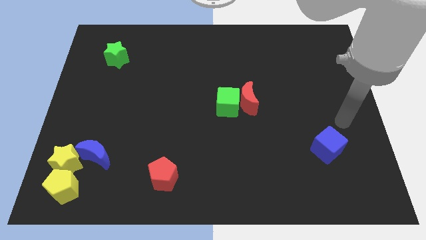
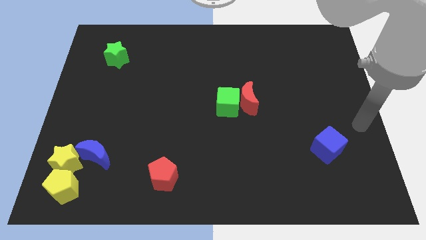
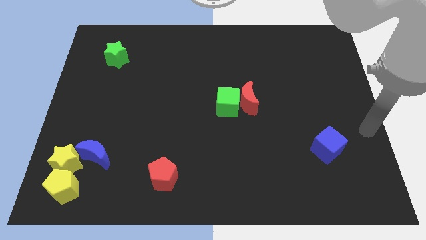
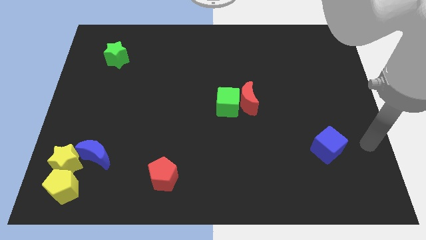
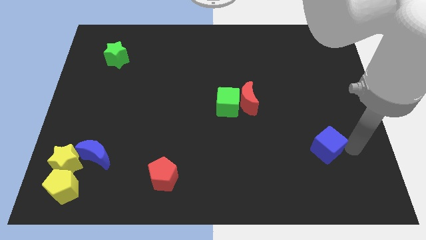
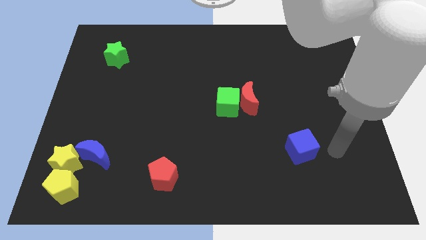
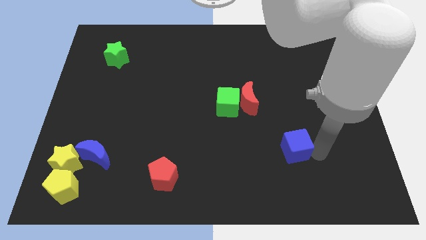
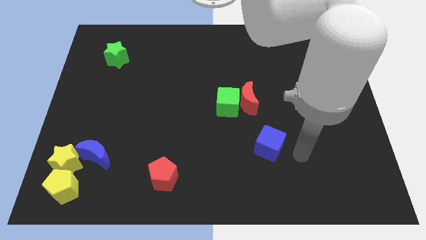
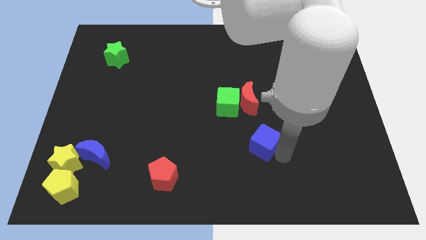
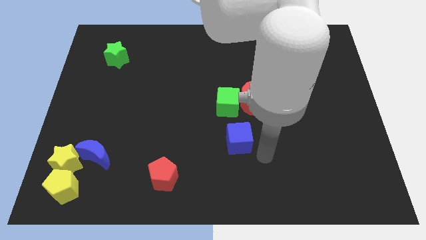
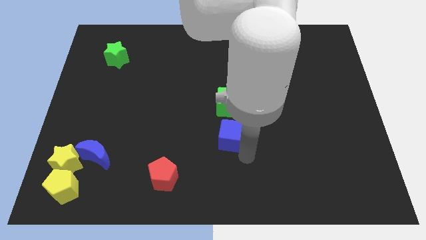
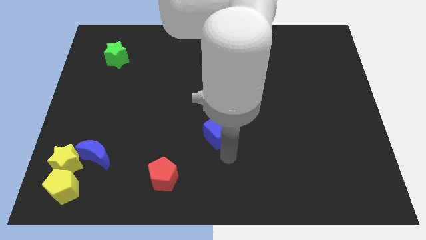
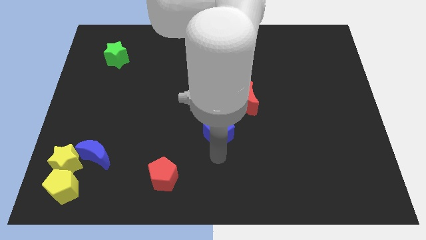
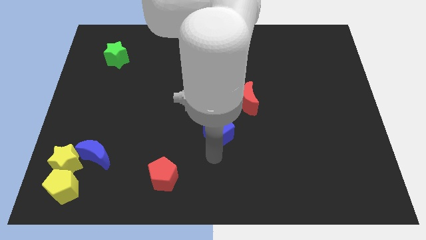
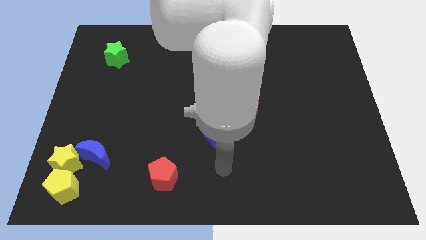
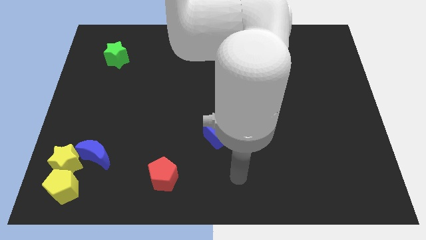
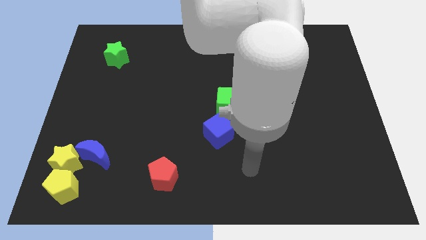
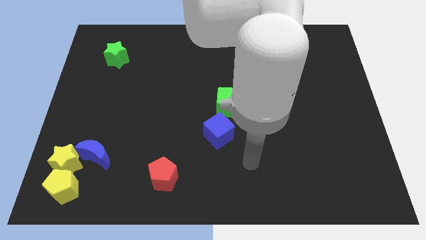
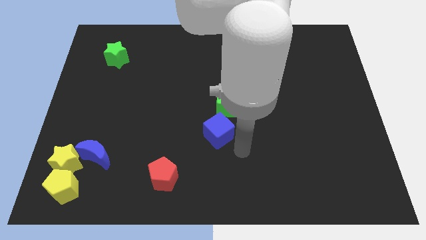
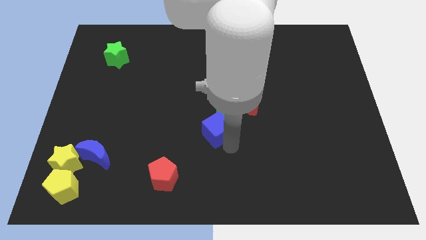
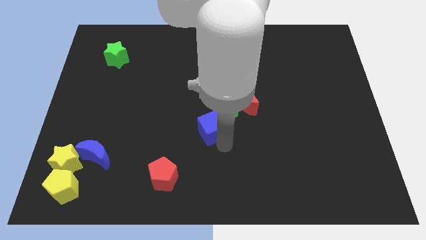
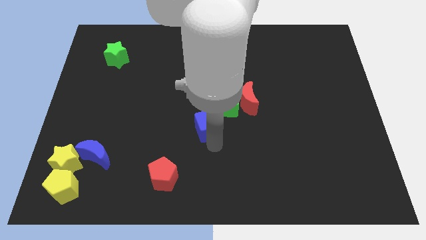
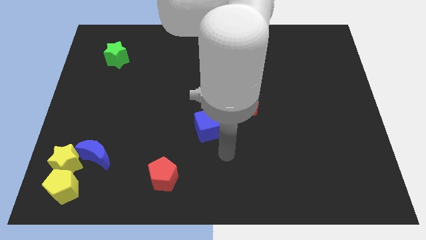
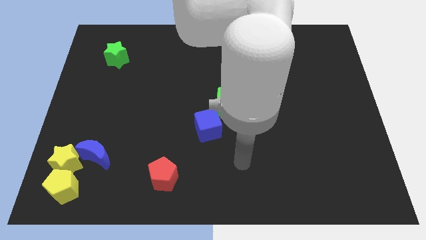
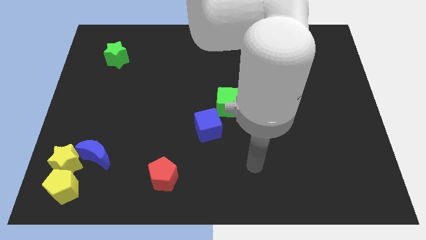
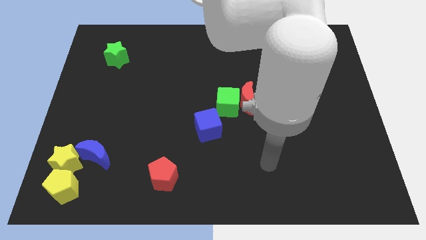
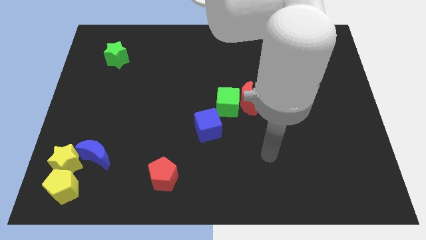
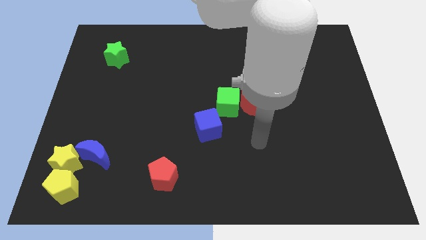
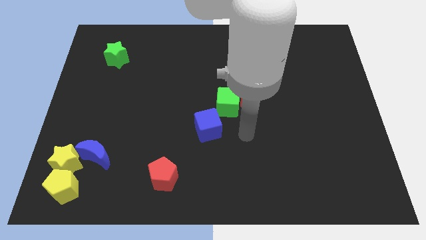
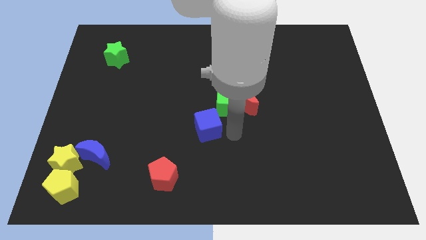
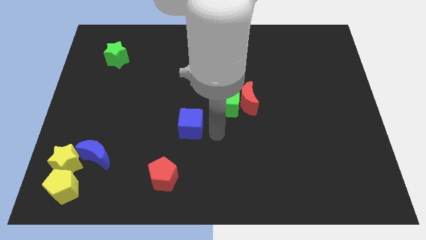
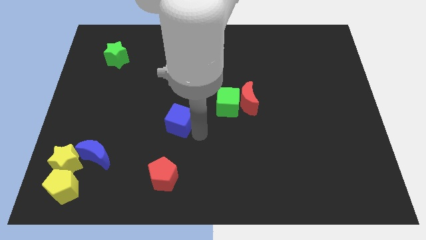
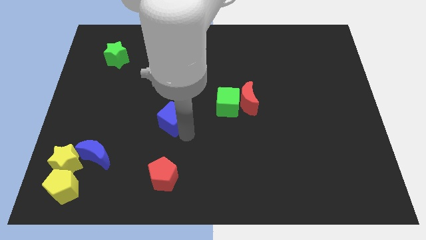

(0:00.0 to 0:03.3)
move the blue cube above the red pentagon

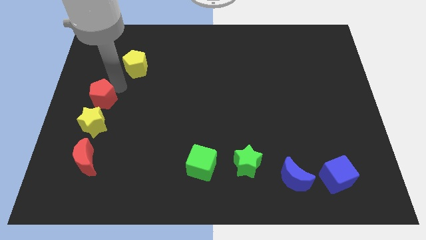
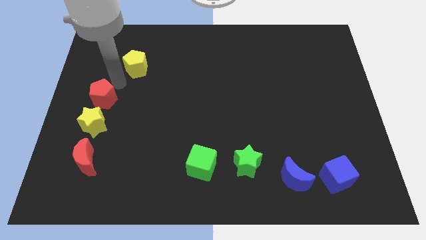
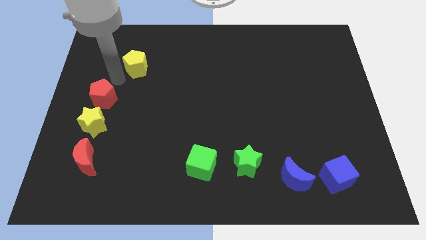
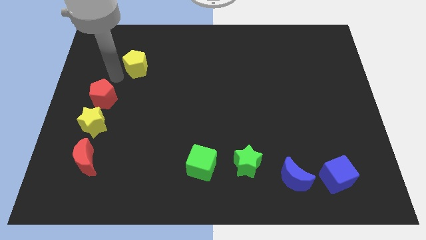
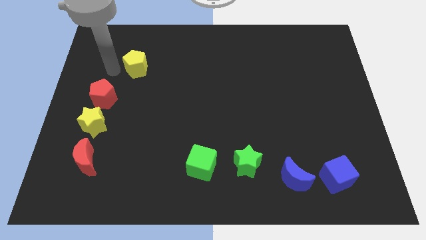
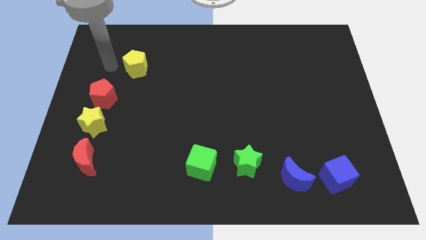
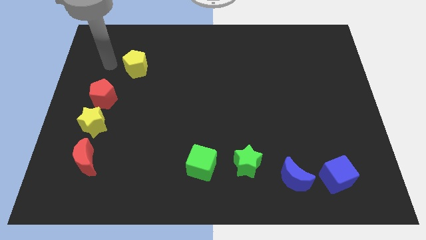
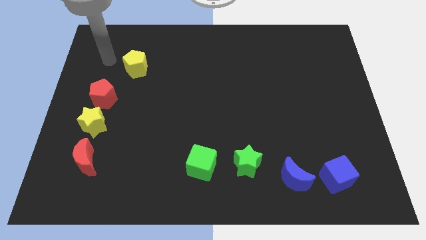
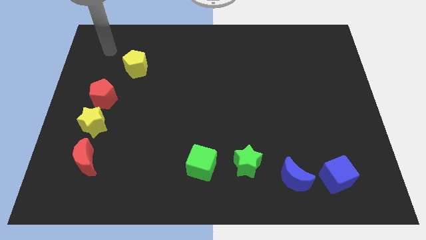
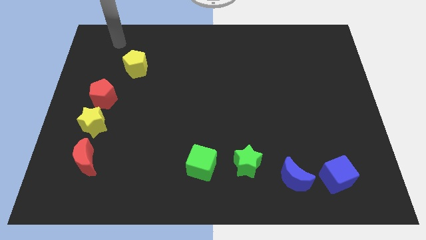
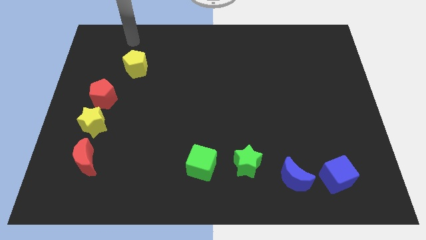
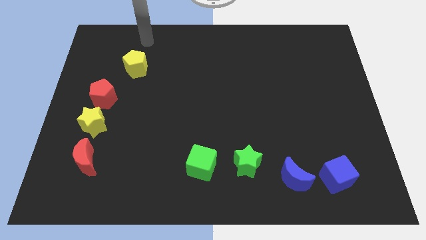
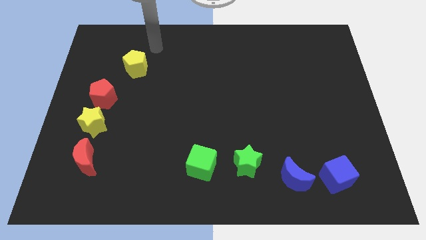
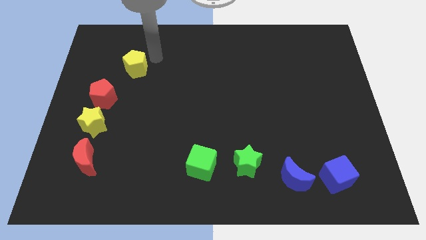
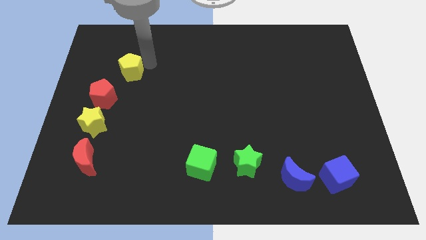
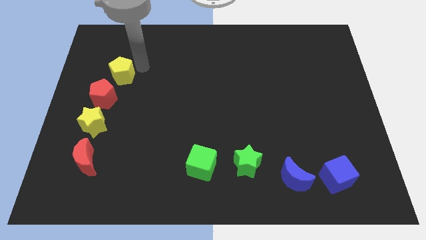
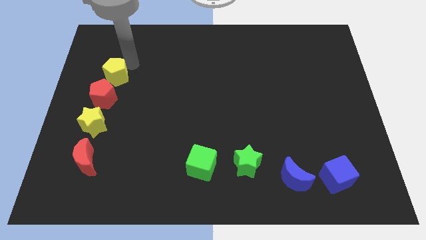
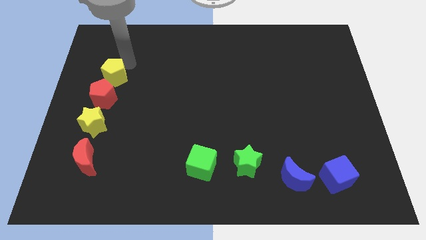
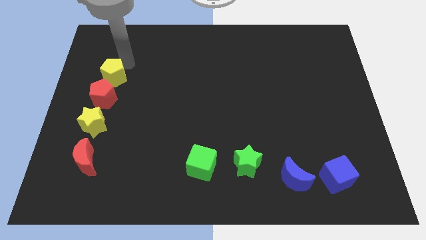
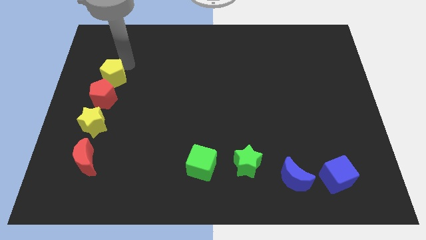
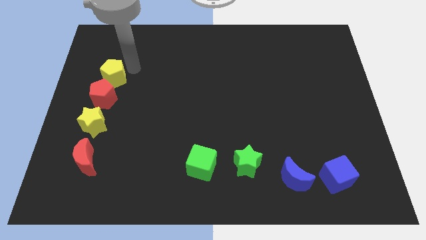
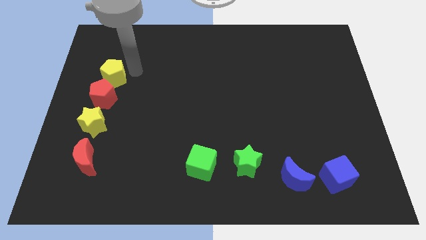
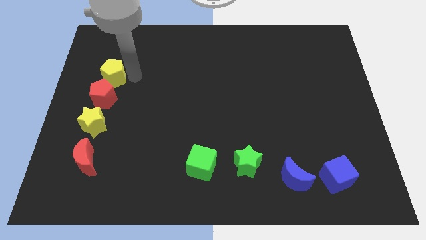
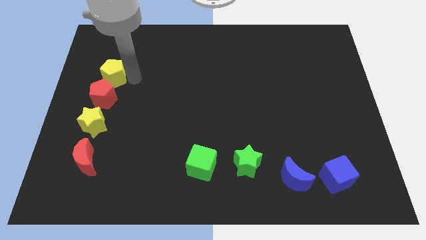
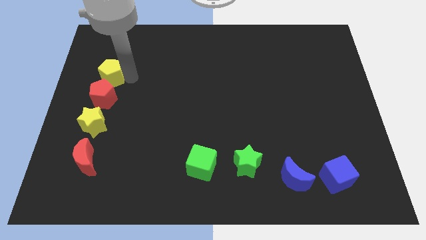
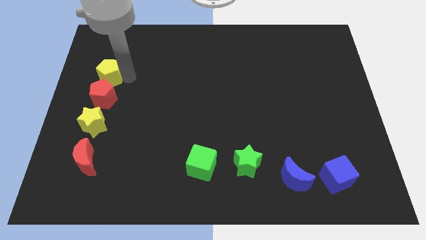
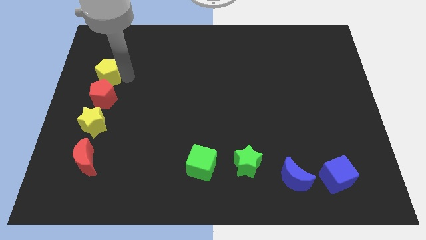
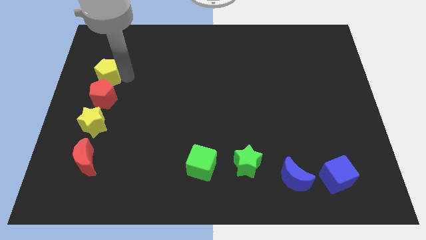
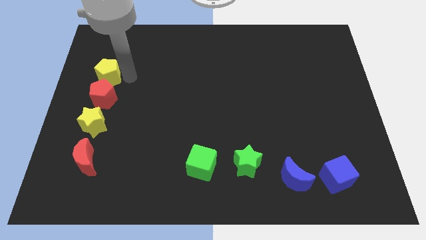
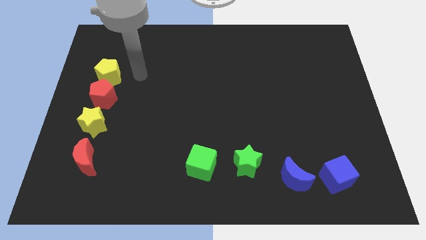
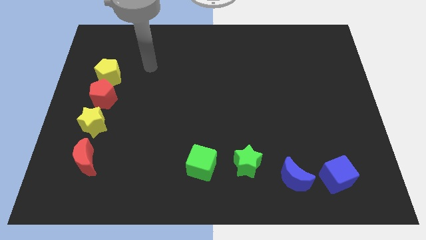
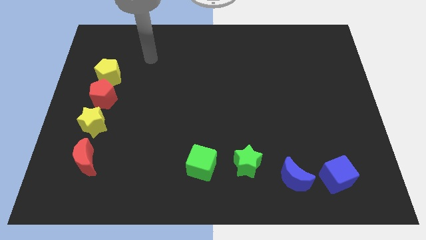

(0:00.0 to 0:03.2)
put the yellow pentagon above the red pentagon

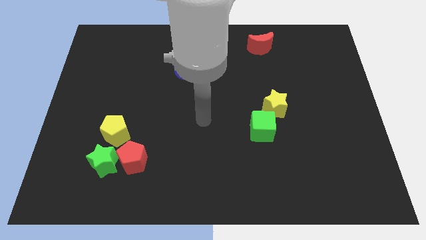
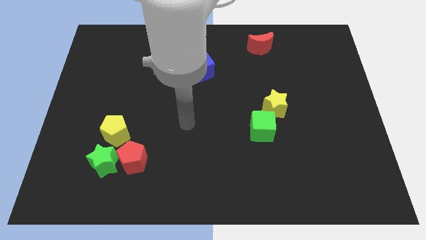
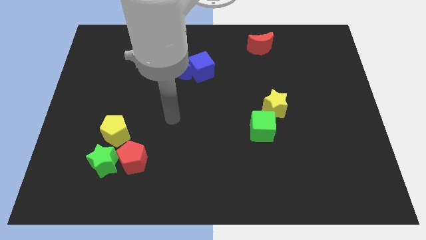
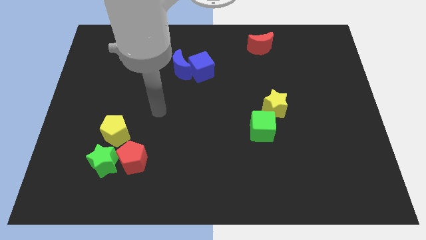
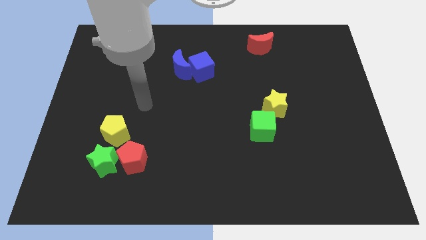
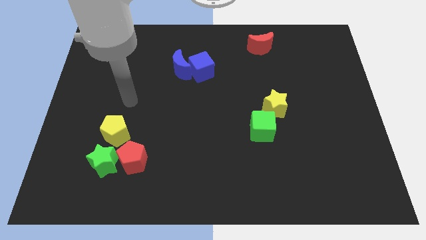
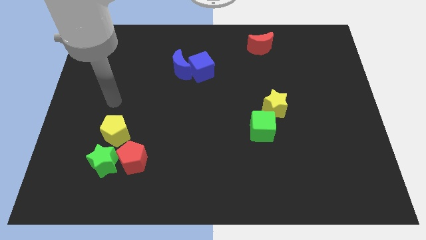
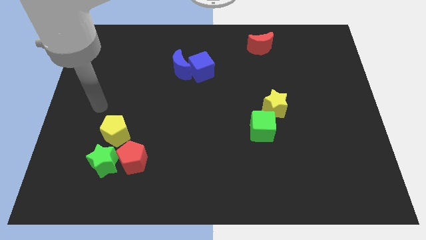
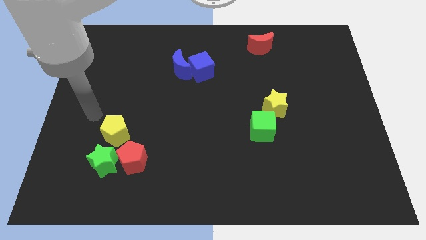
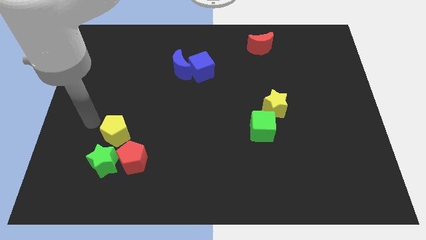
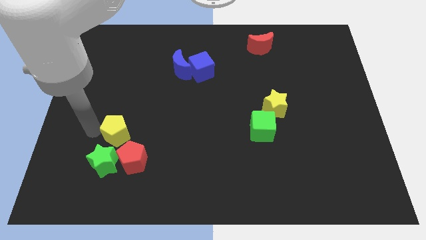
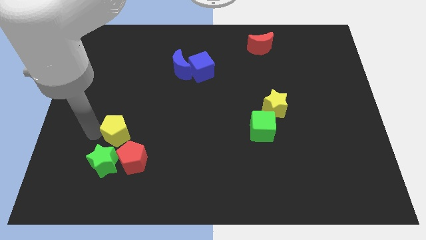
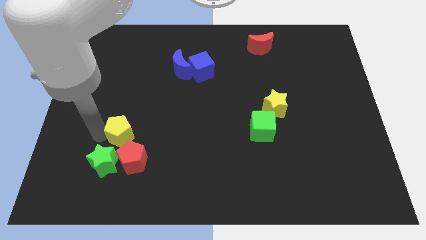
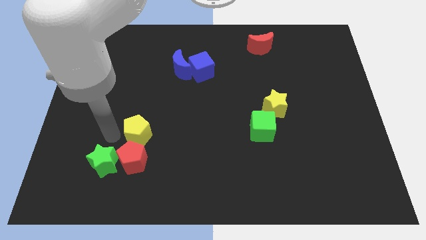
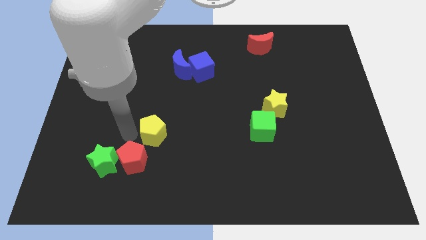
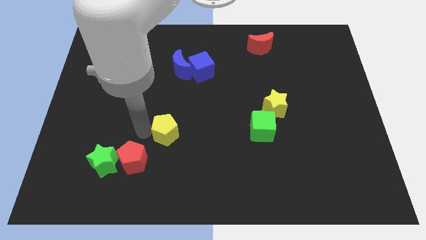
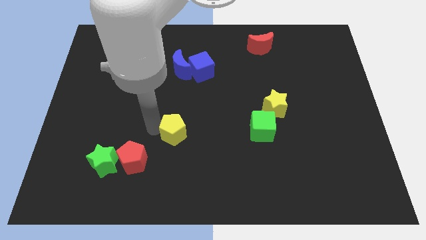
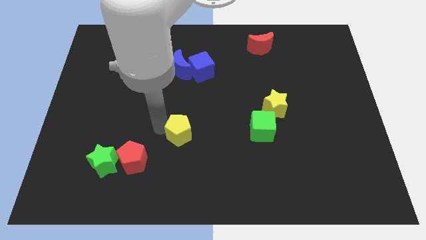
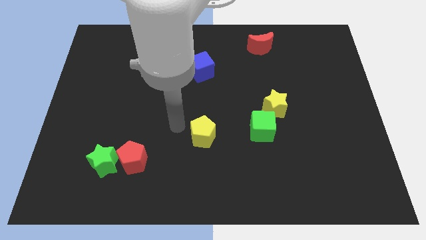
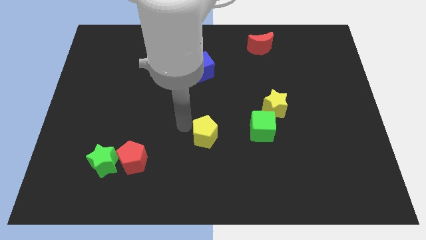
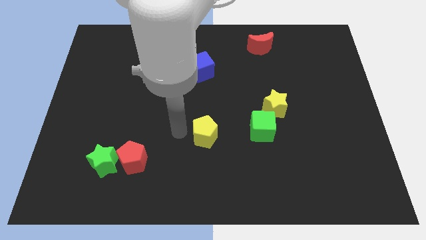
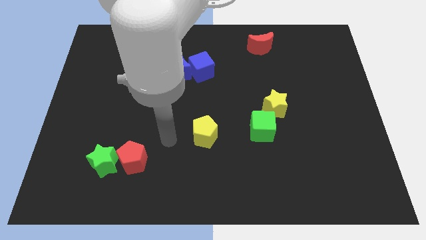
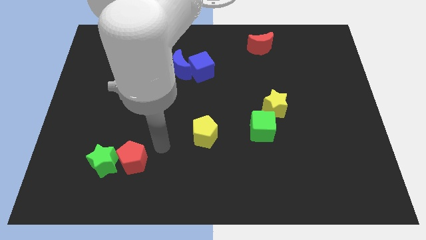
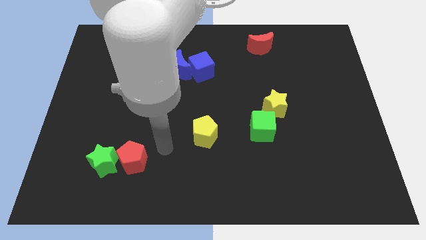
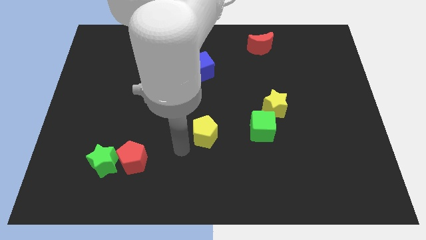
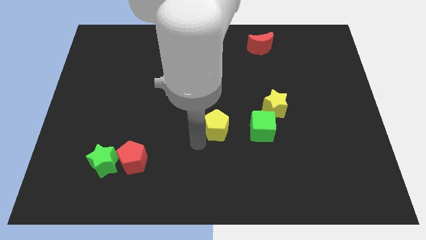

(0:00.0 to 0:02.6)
push the yellow pentagon towards the green cube

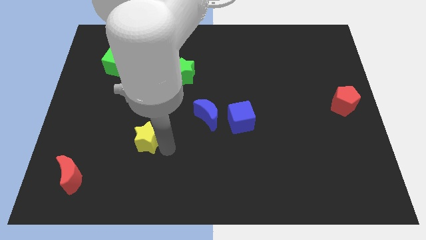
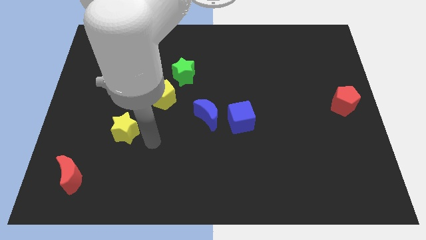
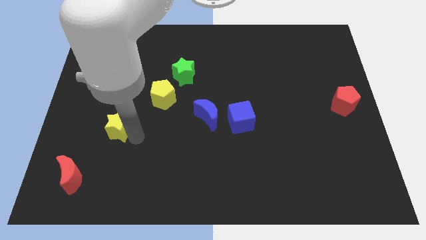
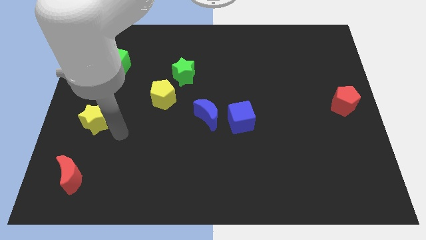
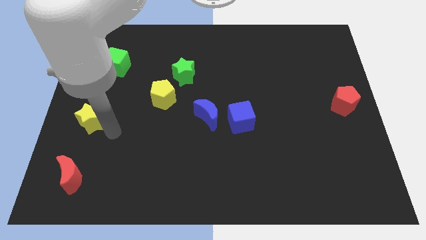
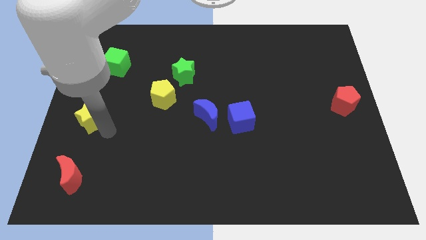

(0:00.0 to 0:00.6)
place yellow star in between red moon and green cube
